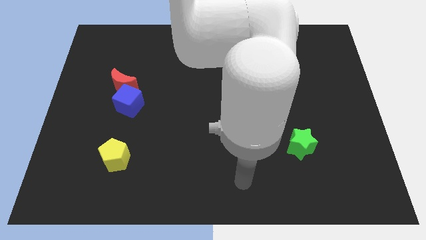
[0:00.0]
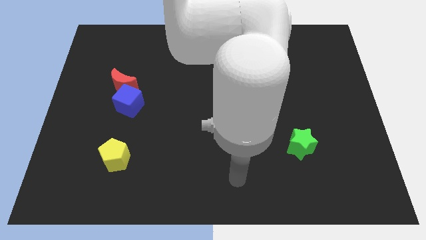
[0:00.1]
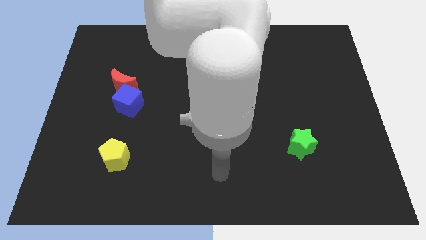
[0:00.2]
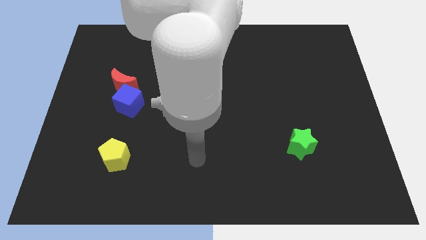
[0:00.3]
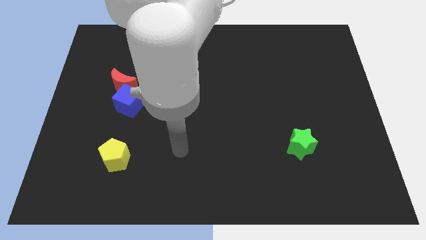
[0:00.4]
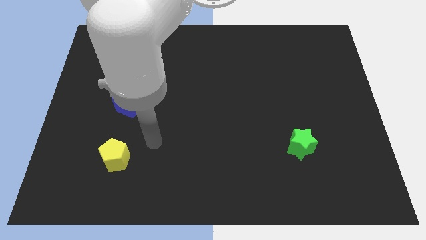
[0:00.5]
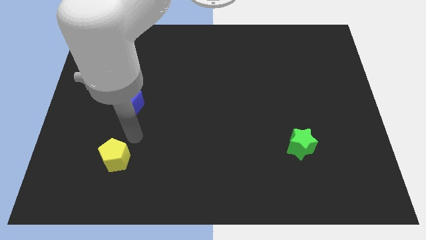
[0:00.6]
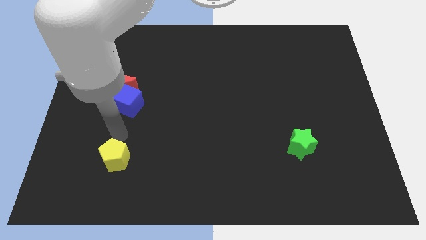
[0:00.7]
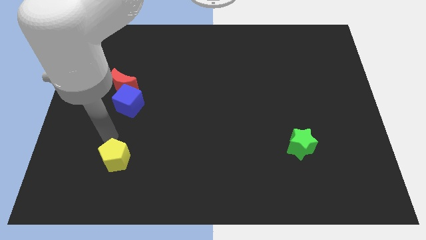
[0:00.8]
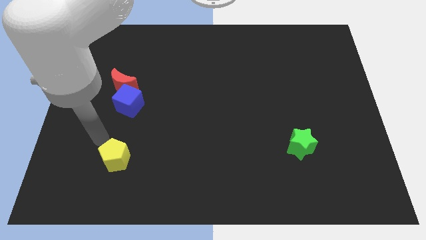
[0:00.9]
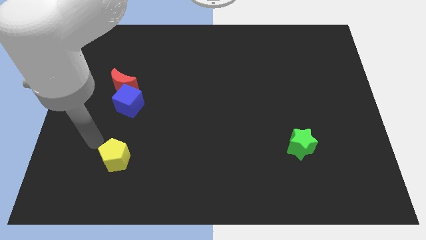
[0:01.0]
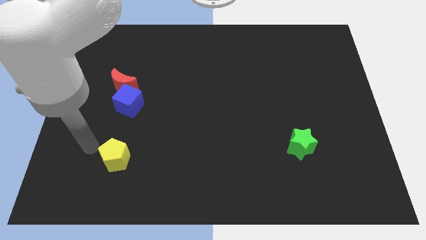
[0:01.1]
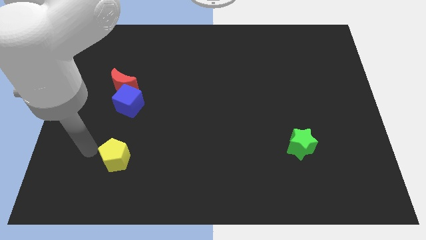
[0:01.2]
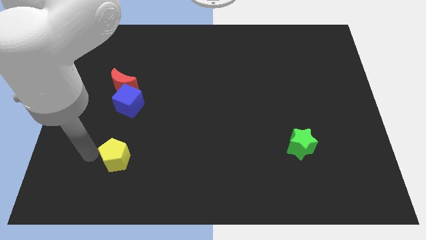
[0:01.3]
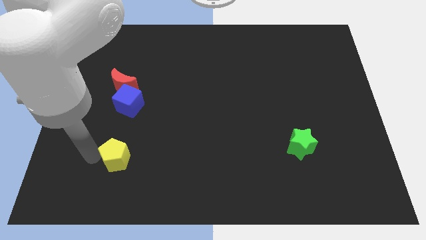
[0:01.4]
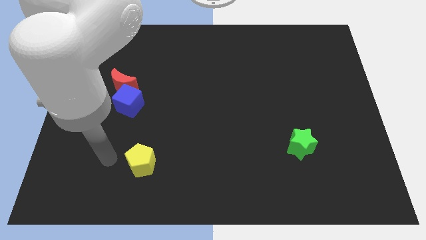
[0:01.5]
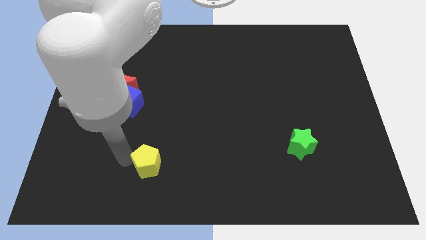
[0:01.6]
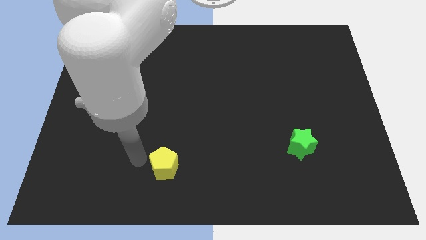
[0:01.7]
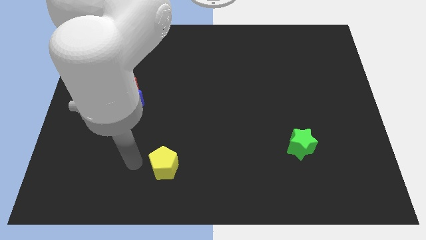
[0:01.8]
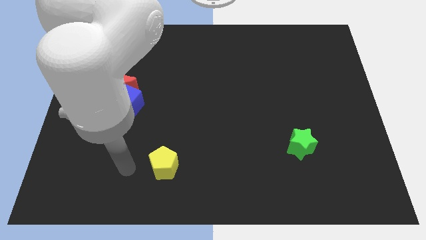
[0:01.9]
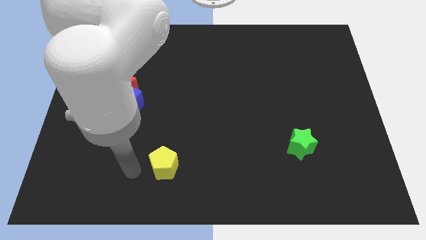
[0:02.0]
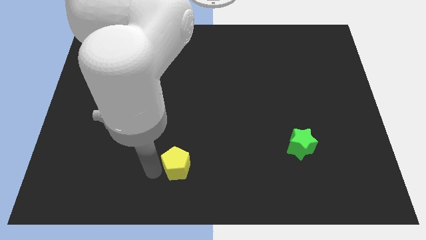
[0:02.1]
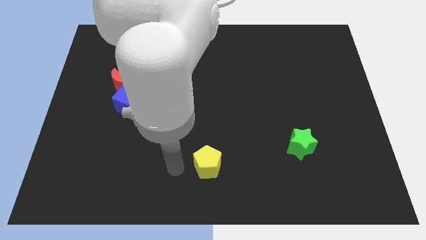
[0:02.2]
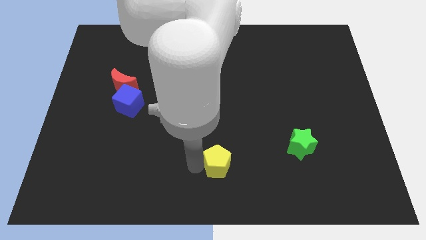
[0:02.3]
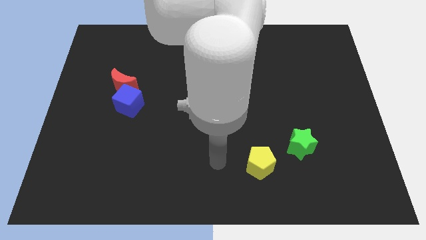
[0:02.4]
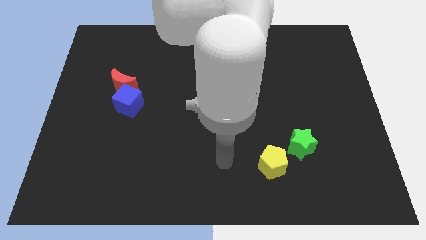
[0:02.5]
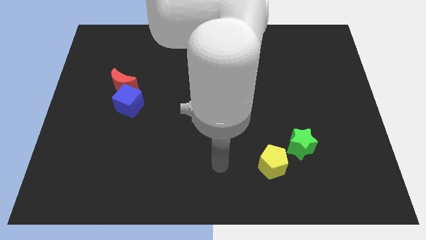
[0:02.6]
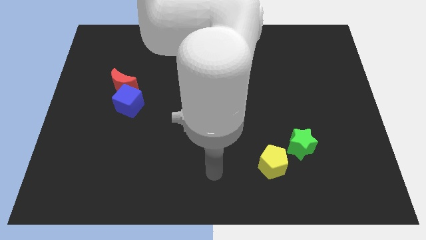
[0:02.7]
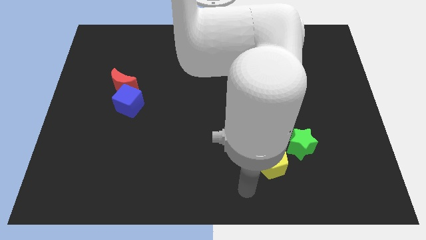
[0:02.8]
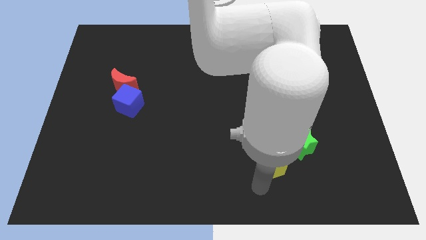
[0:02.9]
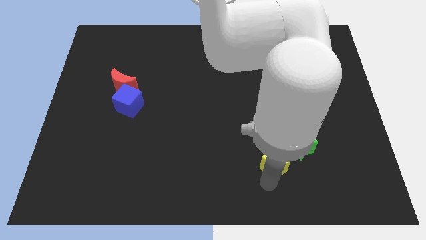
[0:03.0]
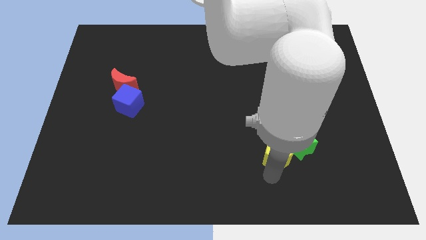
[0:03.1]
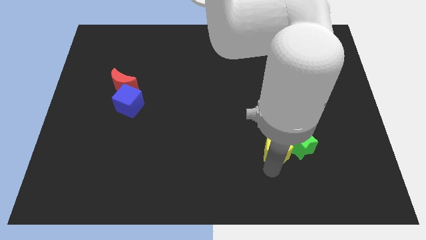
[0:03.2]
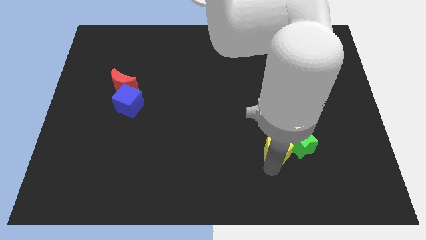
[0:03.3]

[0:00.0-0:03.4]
slide the yellow block towards the star

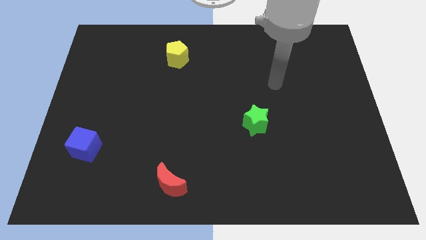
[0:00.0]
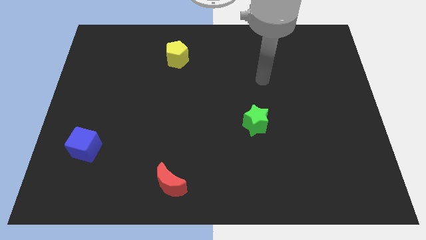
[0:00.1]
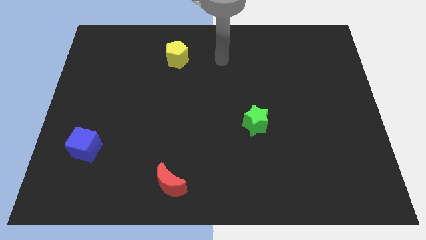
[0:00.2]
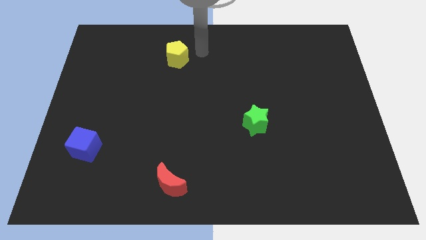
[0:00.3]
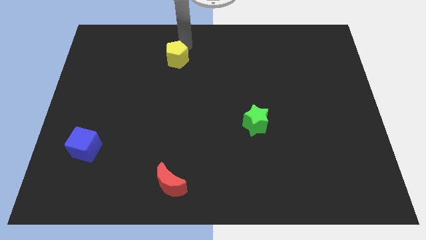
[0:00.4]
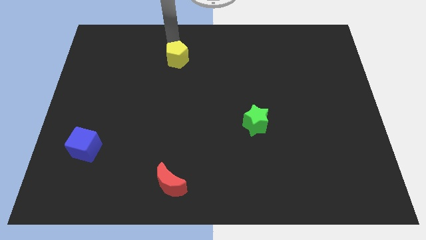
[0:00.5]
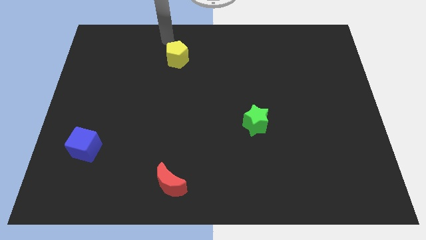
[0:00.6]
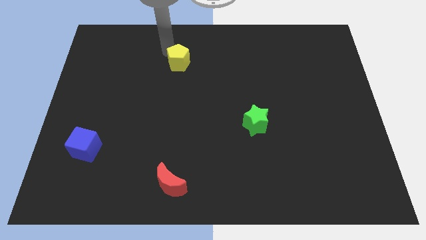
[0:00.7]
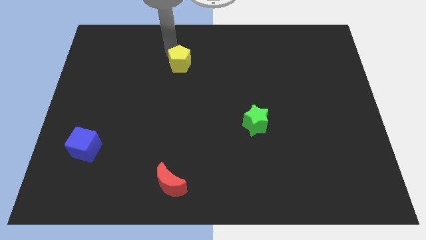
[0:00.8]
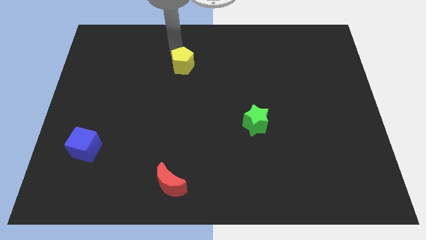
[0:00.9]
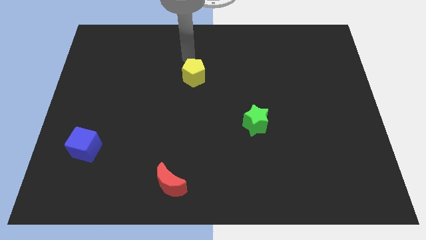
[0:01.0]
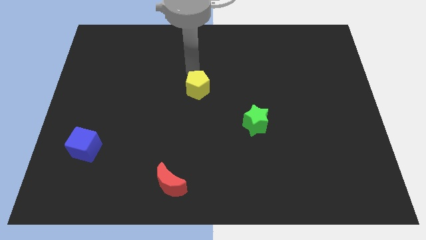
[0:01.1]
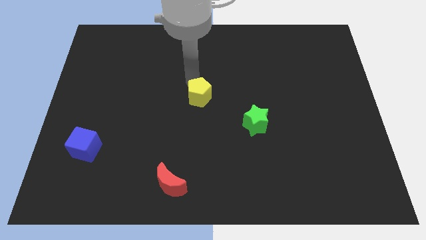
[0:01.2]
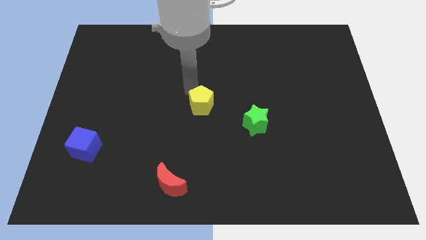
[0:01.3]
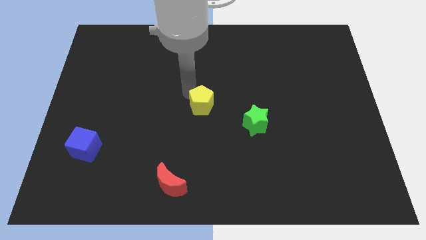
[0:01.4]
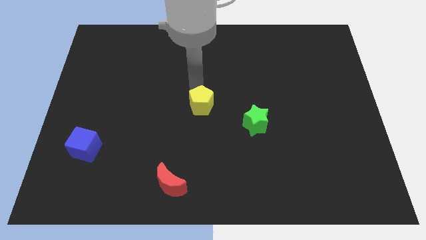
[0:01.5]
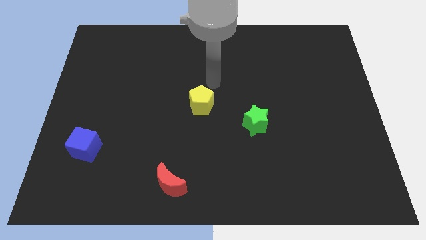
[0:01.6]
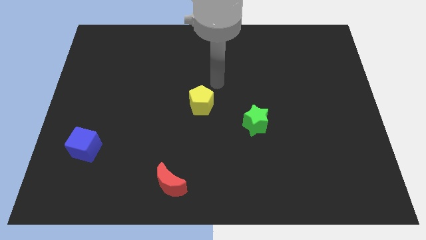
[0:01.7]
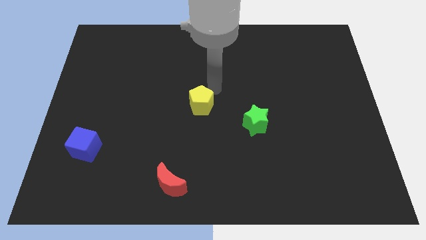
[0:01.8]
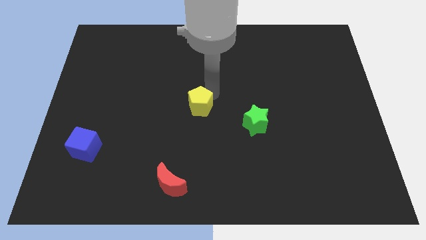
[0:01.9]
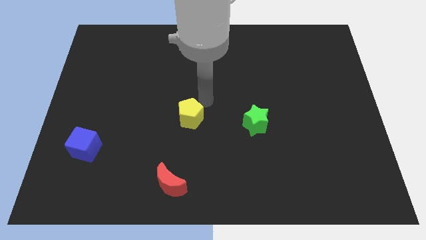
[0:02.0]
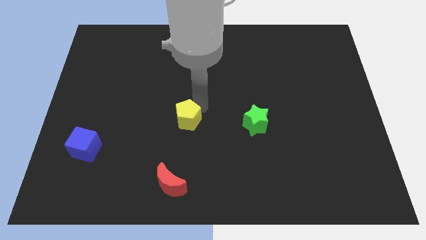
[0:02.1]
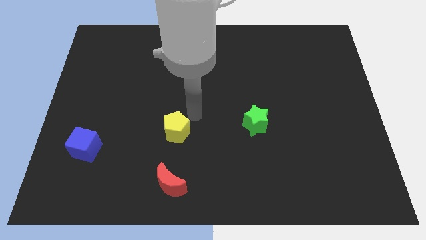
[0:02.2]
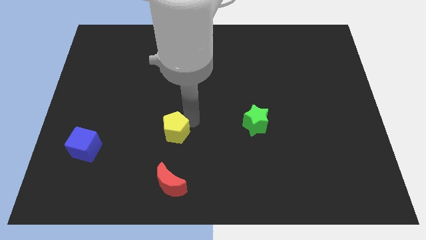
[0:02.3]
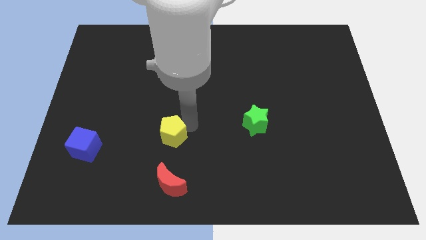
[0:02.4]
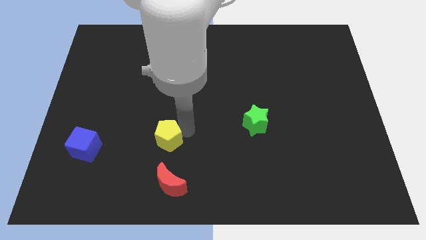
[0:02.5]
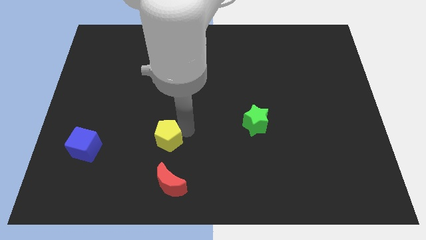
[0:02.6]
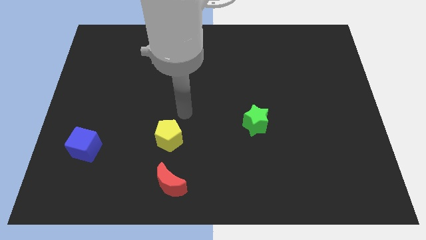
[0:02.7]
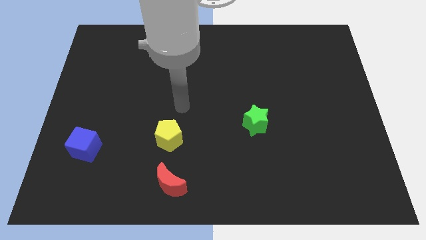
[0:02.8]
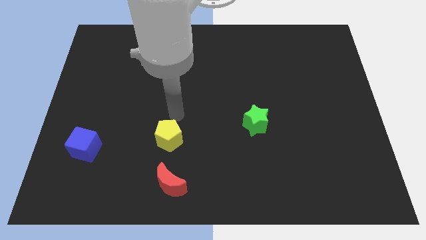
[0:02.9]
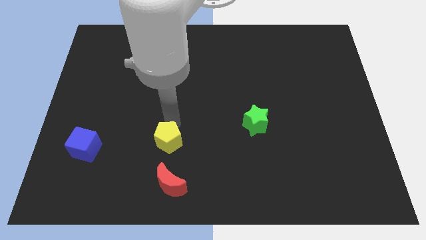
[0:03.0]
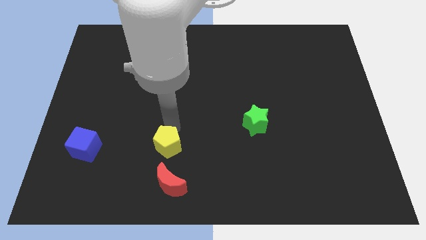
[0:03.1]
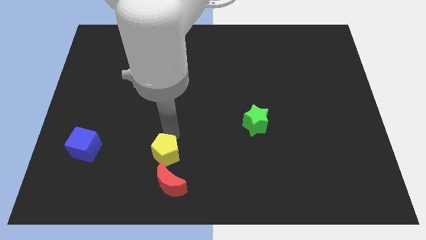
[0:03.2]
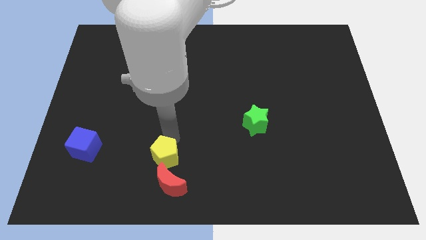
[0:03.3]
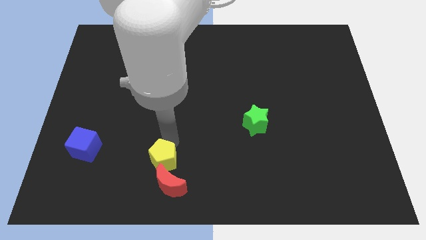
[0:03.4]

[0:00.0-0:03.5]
slide the pentagon to the moon

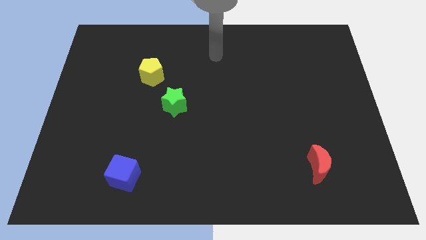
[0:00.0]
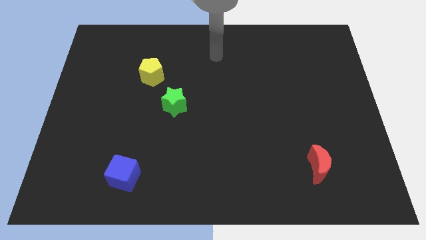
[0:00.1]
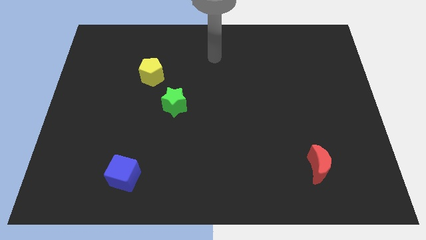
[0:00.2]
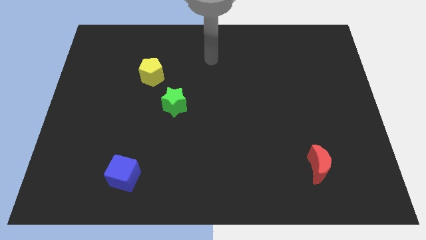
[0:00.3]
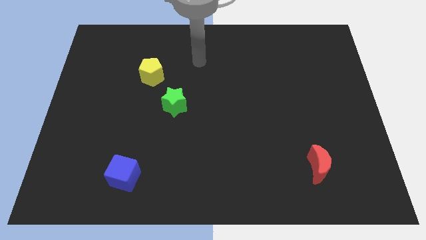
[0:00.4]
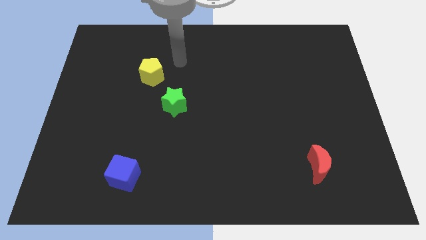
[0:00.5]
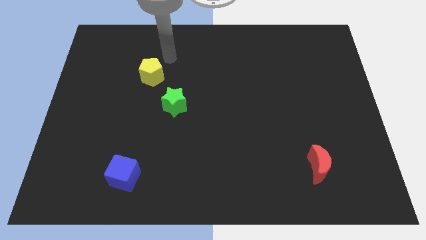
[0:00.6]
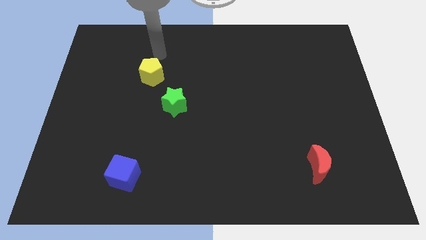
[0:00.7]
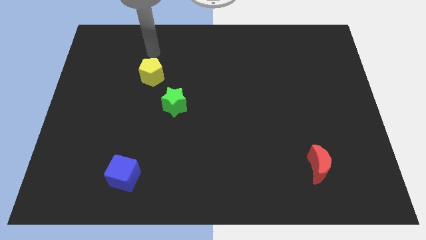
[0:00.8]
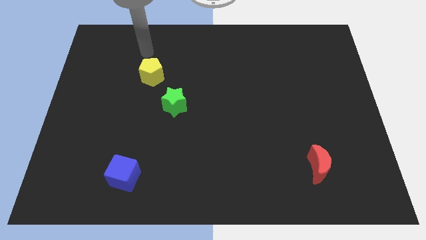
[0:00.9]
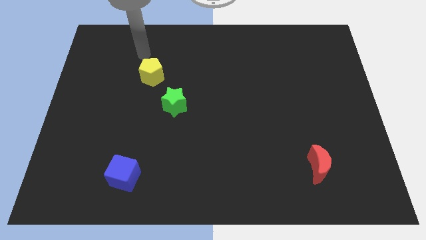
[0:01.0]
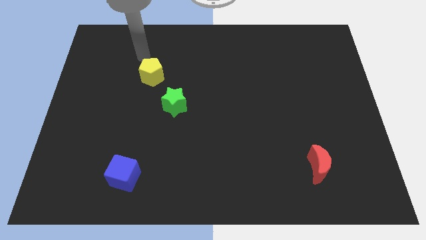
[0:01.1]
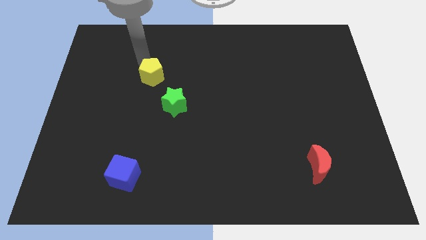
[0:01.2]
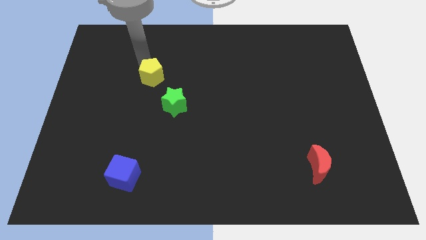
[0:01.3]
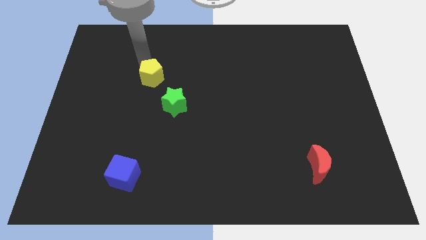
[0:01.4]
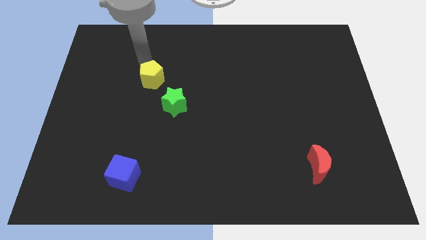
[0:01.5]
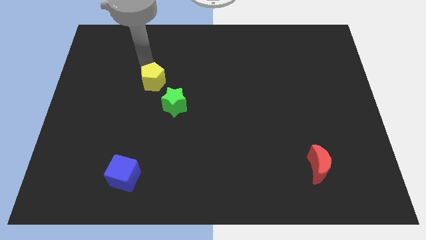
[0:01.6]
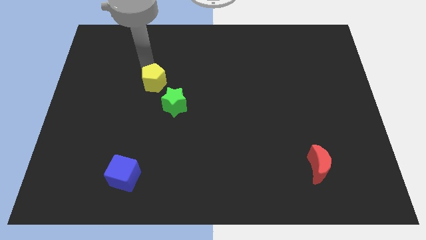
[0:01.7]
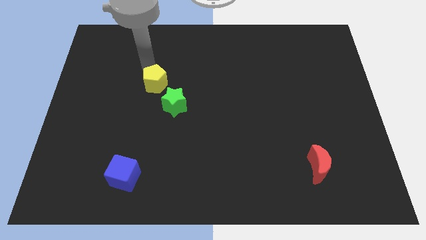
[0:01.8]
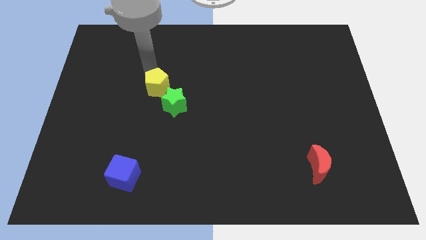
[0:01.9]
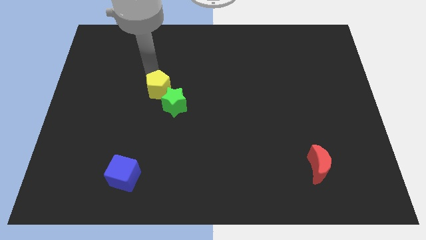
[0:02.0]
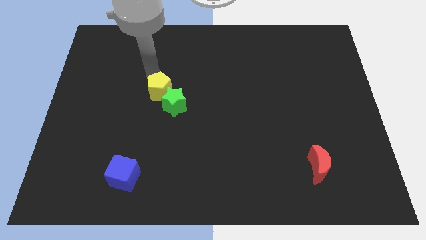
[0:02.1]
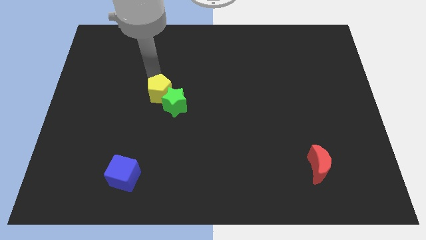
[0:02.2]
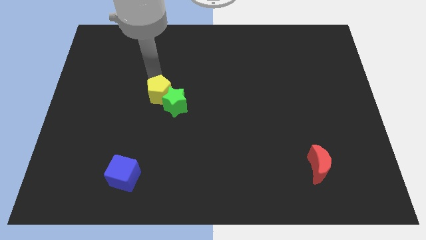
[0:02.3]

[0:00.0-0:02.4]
slide the yellow pentagon to the green star
